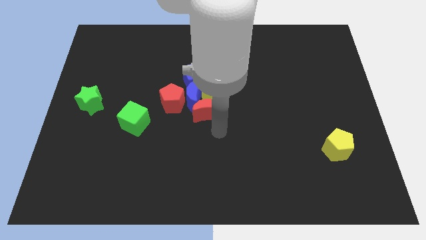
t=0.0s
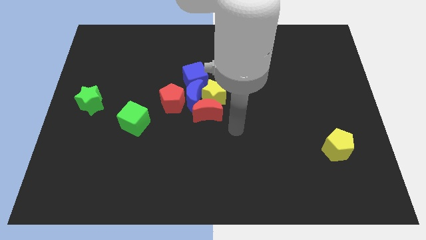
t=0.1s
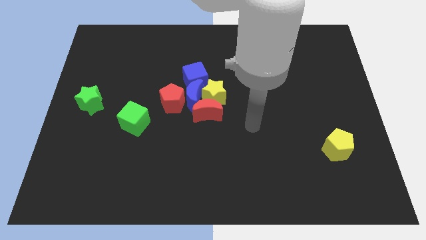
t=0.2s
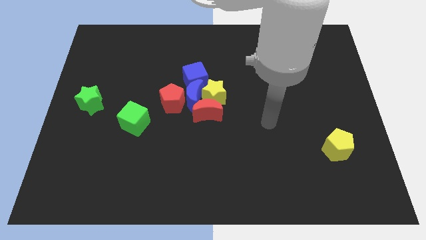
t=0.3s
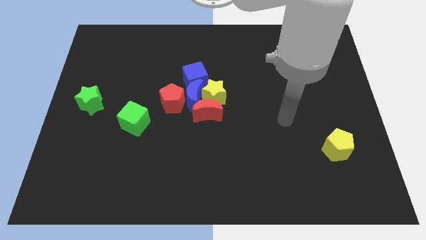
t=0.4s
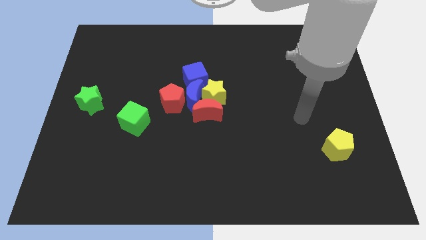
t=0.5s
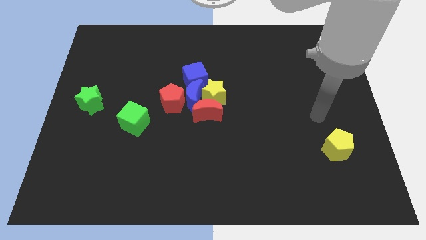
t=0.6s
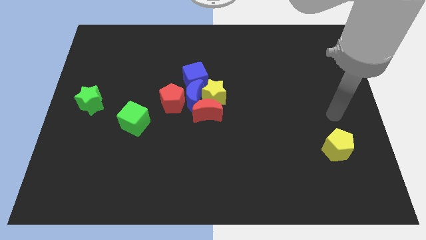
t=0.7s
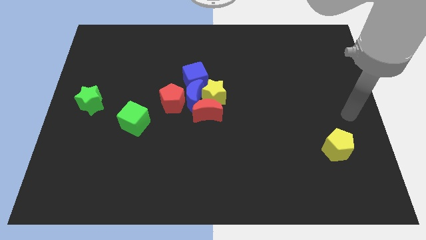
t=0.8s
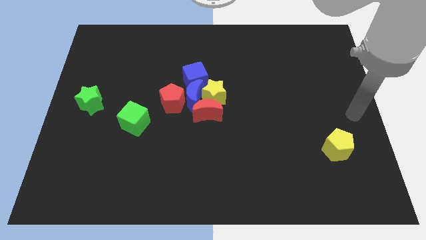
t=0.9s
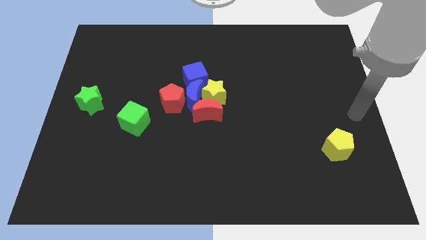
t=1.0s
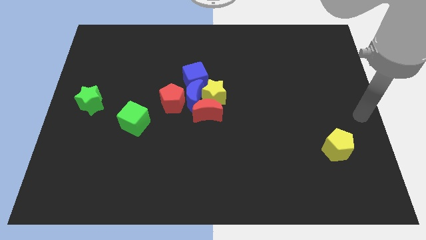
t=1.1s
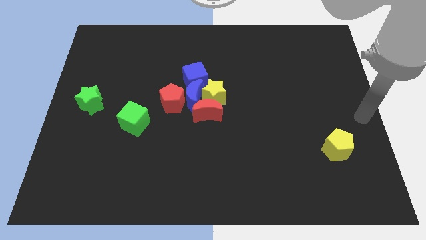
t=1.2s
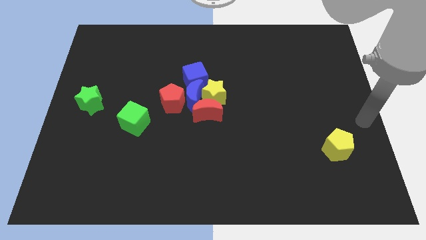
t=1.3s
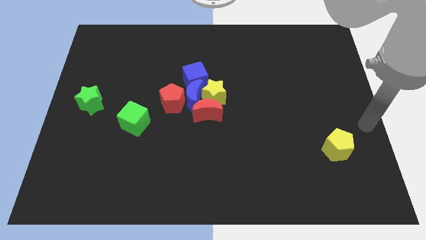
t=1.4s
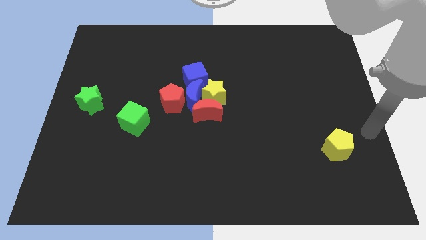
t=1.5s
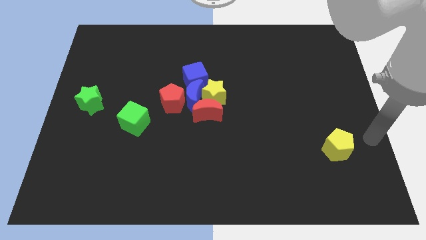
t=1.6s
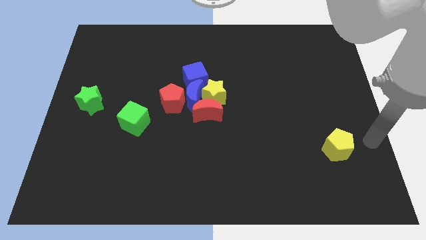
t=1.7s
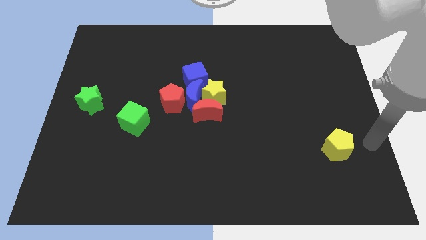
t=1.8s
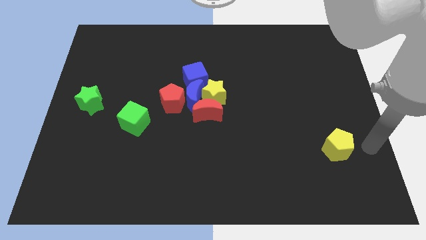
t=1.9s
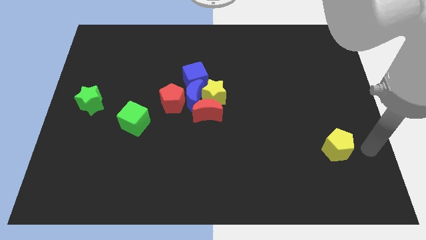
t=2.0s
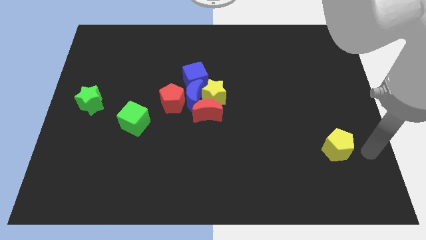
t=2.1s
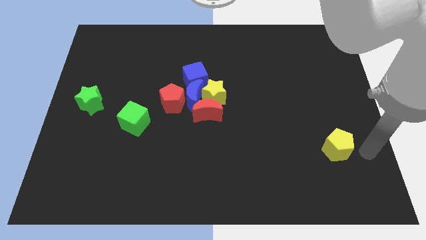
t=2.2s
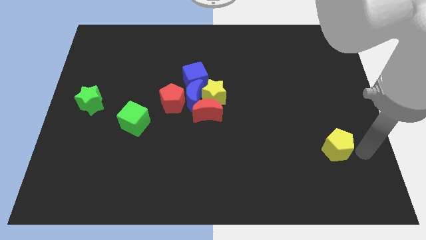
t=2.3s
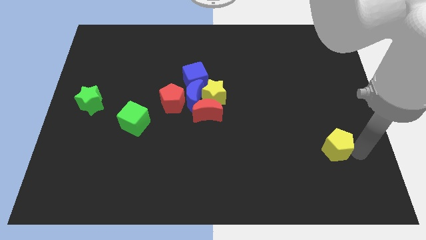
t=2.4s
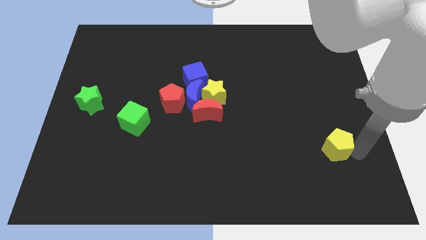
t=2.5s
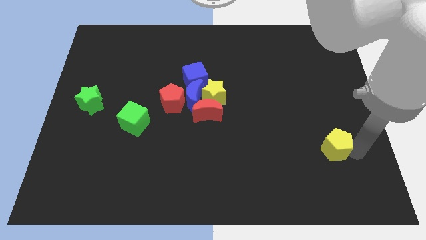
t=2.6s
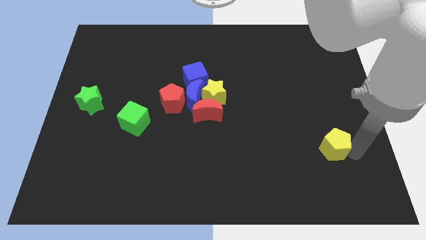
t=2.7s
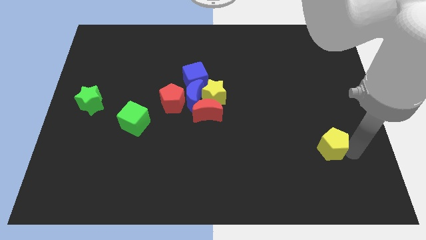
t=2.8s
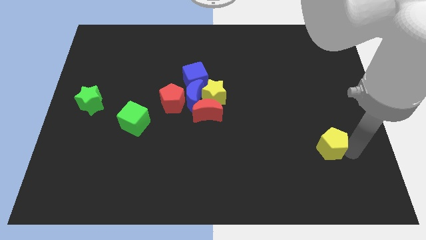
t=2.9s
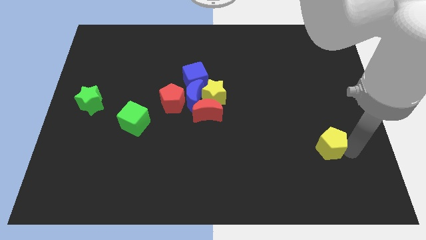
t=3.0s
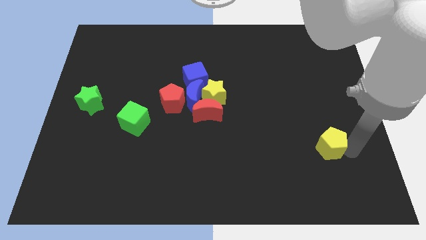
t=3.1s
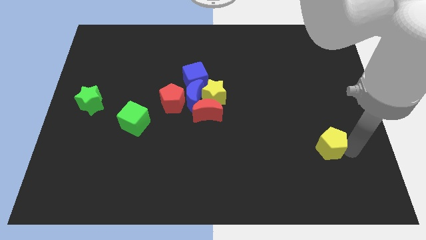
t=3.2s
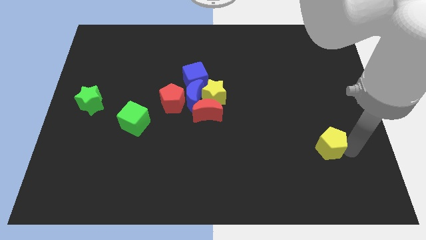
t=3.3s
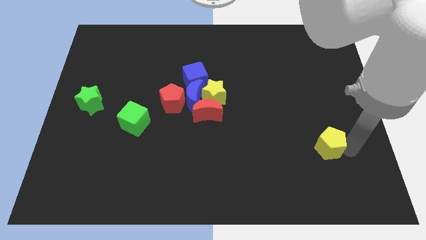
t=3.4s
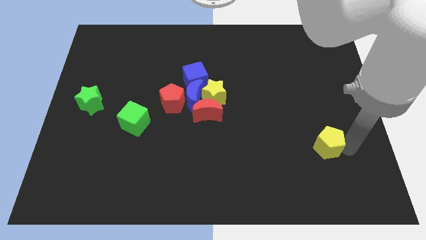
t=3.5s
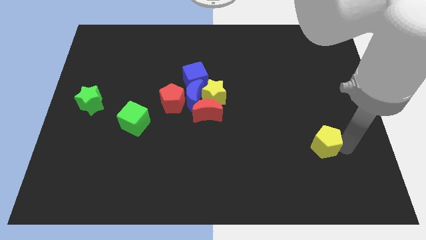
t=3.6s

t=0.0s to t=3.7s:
slightly push the yellow pentagon to the left of the board

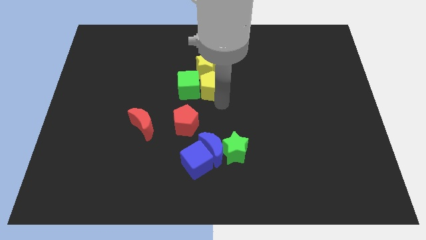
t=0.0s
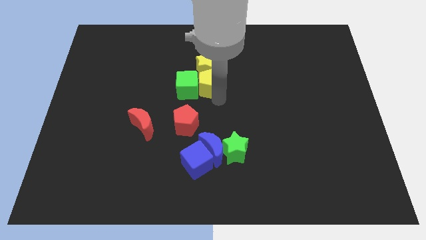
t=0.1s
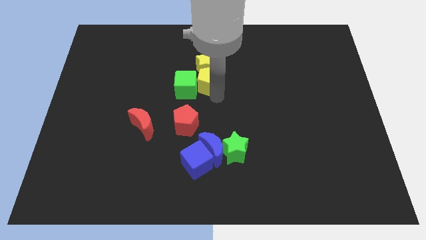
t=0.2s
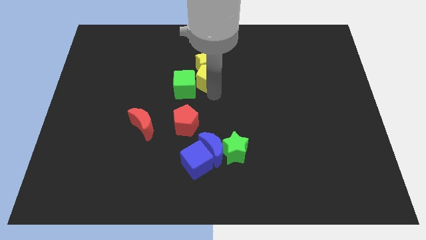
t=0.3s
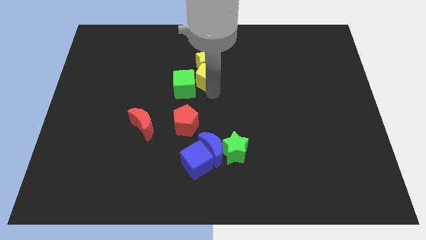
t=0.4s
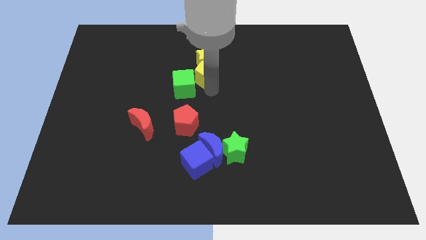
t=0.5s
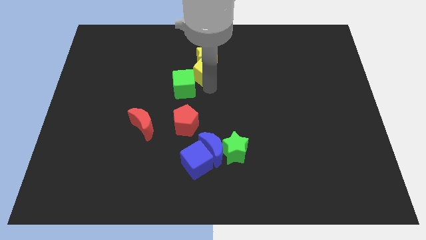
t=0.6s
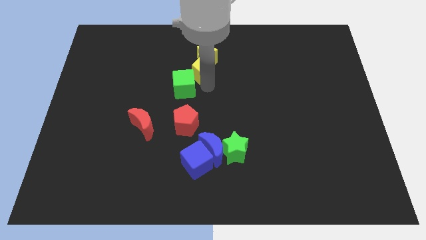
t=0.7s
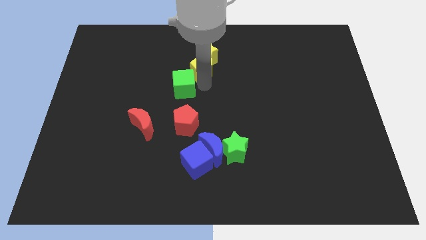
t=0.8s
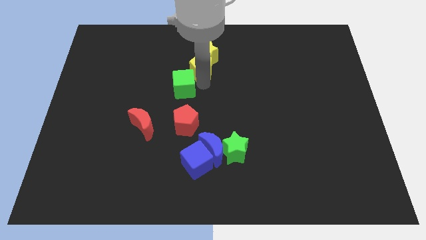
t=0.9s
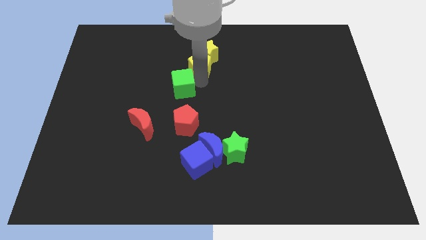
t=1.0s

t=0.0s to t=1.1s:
push the yellow star with the yellow pentagon slightly towards the top center of the board

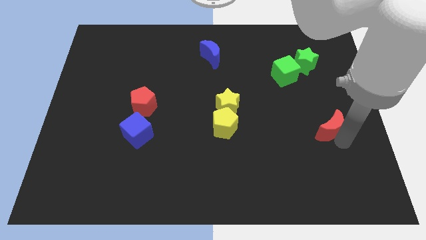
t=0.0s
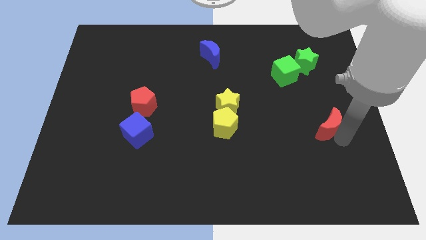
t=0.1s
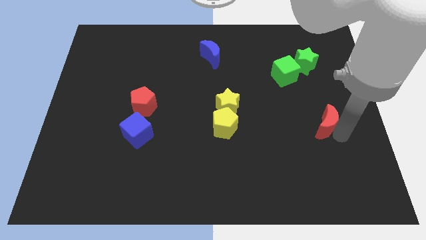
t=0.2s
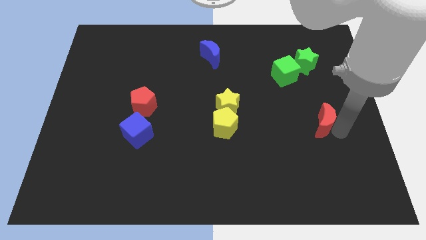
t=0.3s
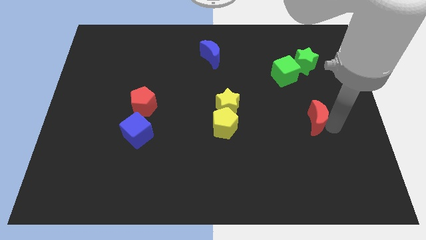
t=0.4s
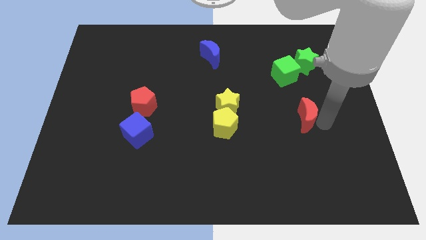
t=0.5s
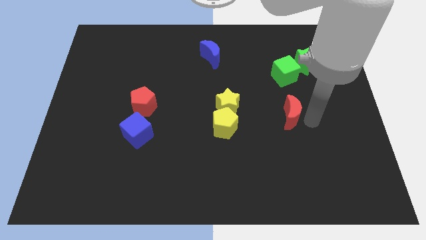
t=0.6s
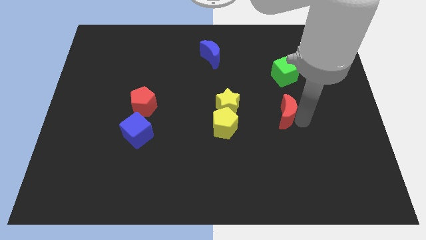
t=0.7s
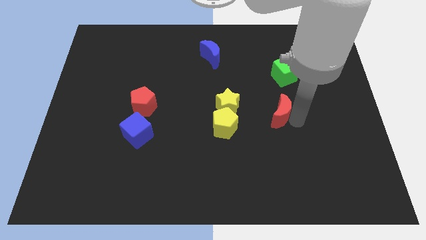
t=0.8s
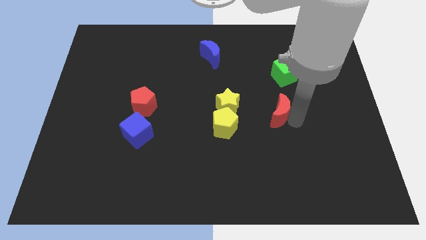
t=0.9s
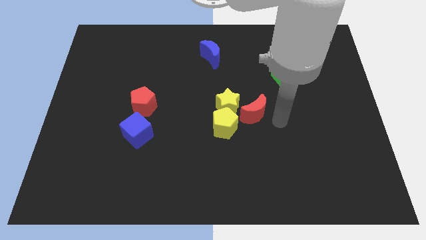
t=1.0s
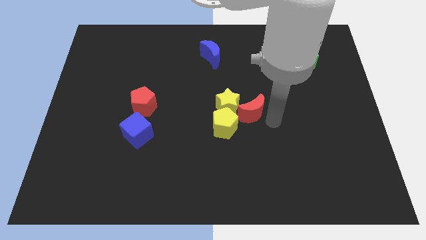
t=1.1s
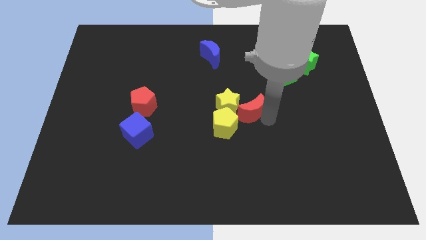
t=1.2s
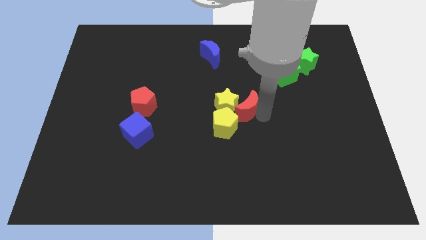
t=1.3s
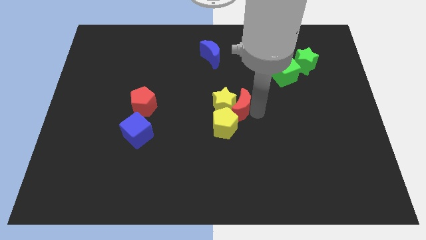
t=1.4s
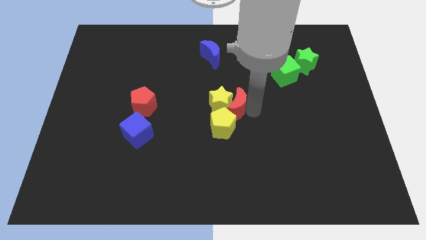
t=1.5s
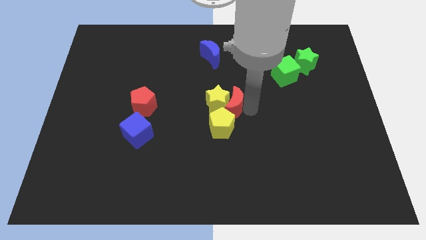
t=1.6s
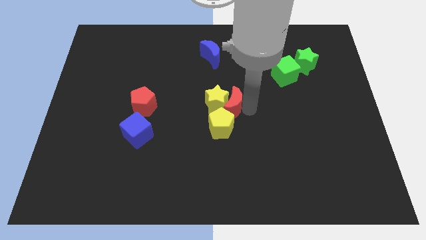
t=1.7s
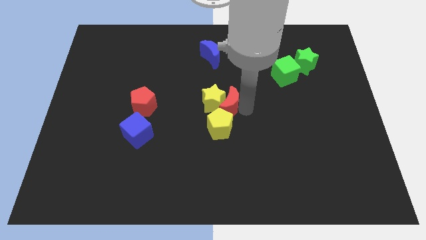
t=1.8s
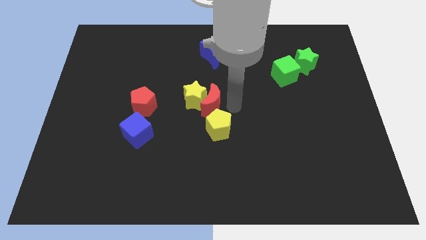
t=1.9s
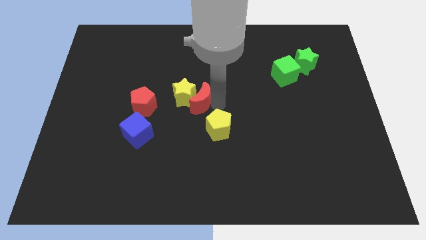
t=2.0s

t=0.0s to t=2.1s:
push the red moon into yellow star

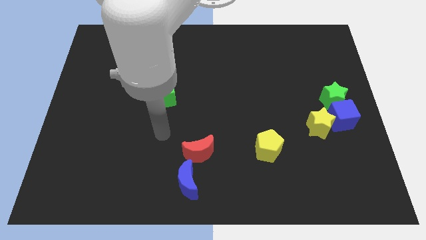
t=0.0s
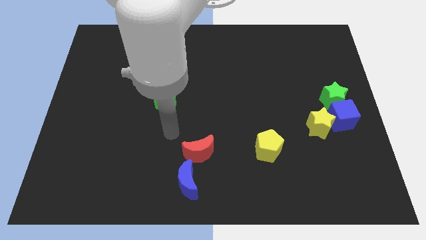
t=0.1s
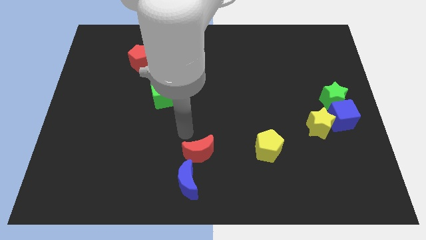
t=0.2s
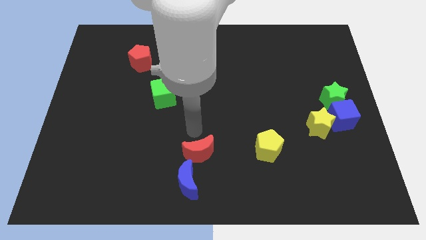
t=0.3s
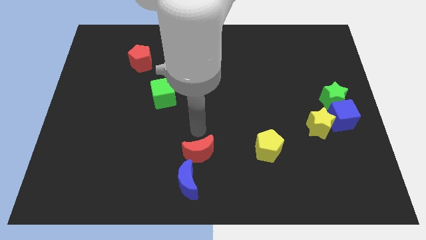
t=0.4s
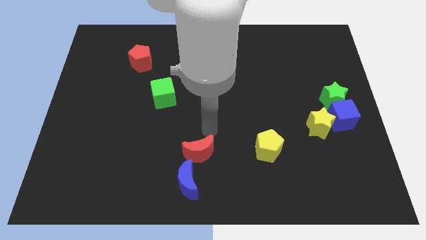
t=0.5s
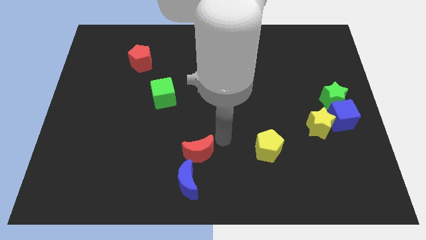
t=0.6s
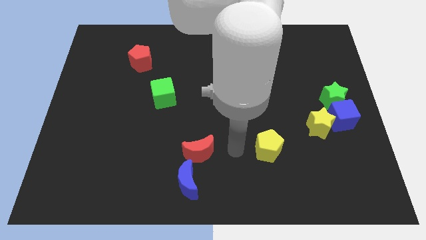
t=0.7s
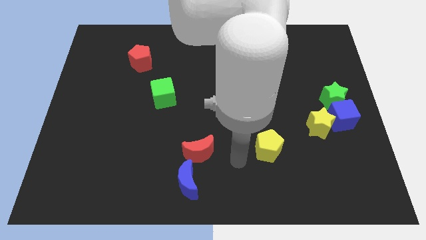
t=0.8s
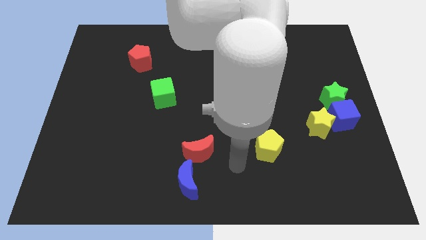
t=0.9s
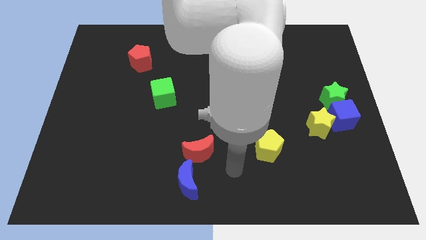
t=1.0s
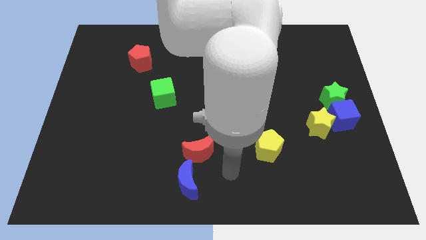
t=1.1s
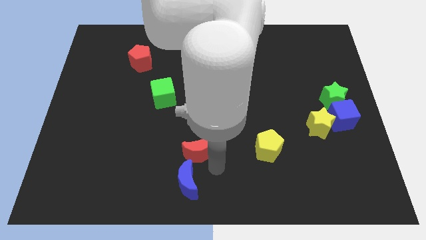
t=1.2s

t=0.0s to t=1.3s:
place your arm at the bottom right side of red crescent

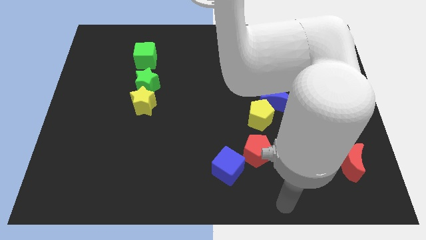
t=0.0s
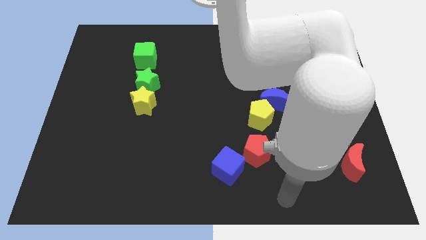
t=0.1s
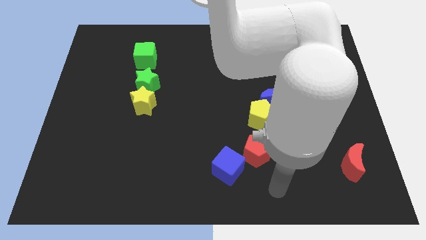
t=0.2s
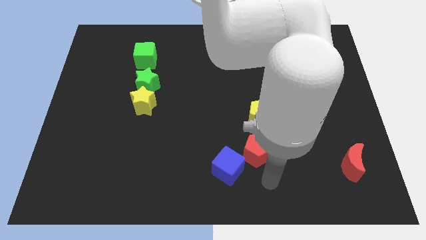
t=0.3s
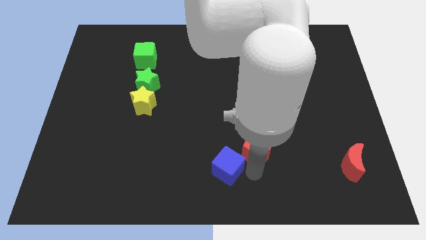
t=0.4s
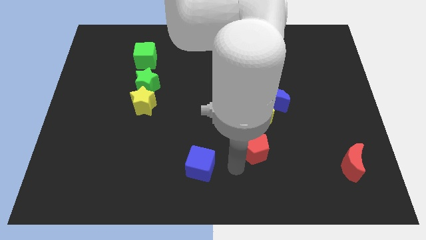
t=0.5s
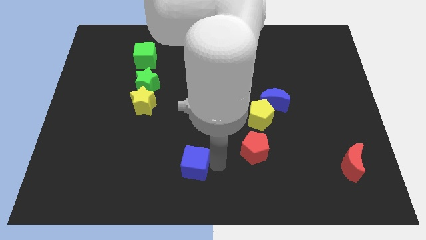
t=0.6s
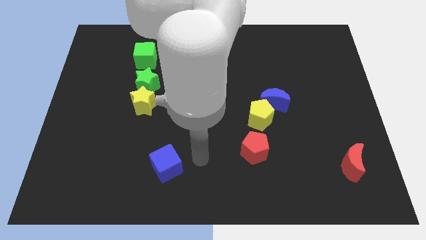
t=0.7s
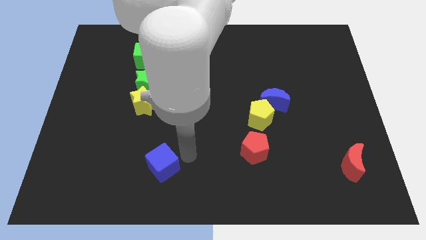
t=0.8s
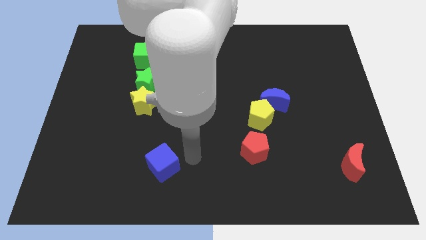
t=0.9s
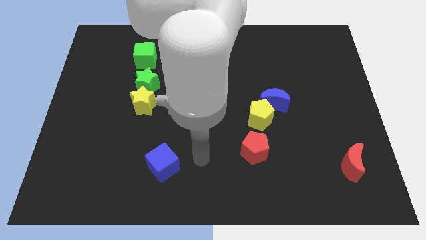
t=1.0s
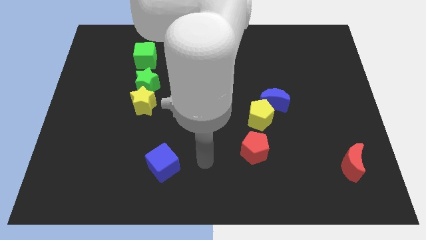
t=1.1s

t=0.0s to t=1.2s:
separate blue cube and red pentagon
